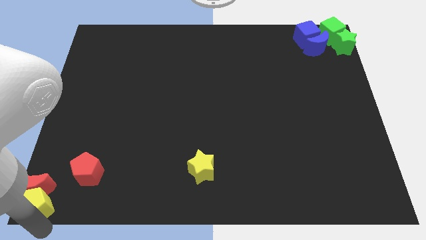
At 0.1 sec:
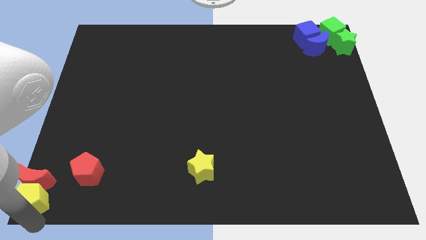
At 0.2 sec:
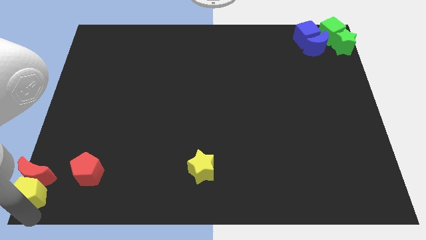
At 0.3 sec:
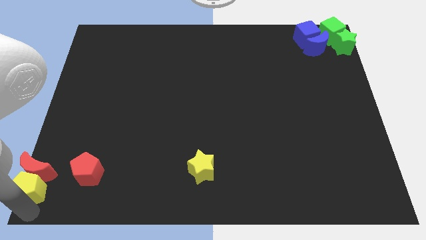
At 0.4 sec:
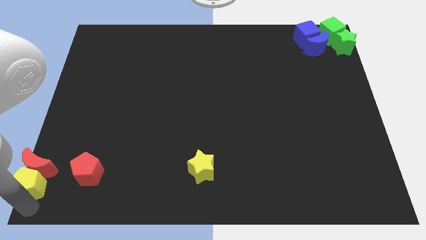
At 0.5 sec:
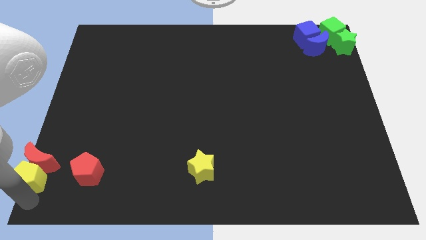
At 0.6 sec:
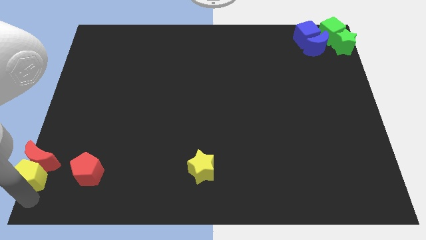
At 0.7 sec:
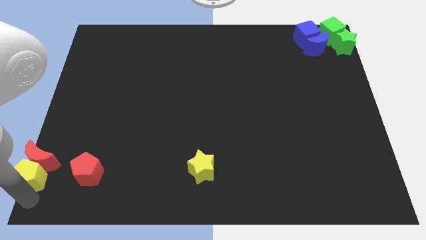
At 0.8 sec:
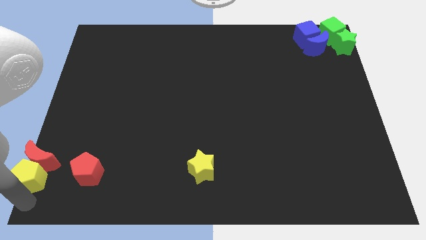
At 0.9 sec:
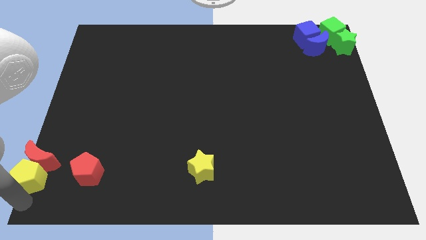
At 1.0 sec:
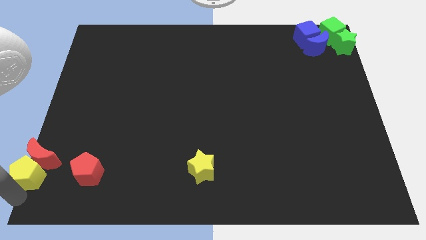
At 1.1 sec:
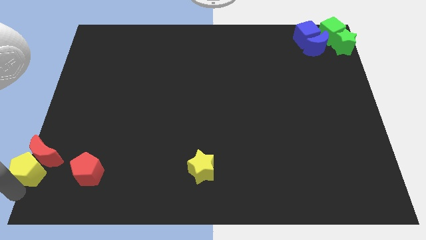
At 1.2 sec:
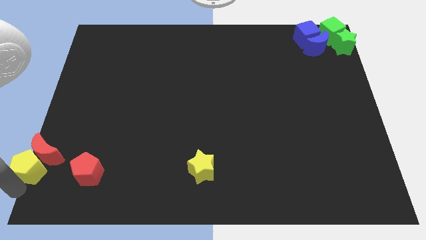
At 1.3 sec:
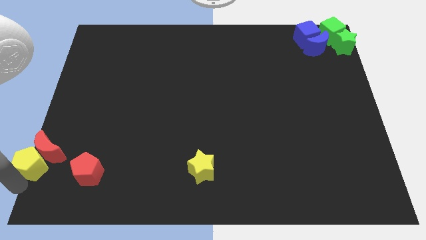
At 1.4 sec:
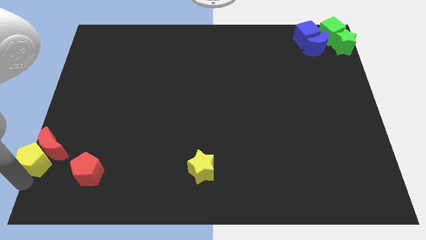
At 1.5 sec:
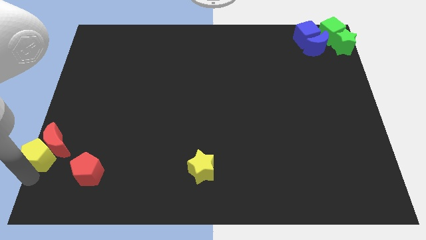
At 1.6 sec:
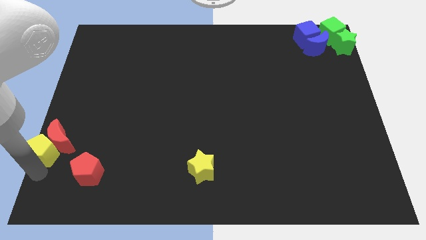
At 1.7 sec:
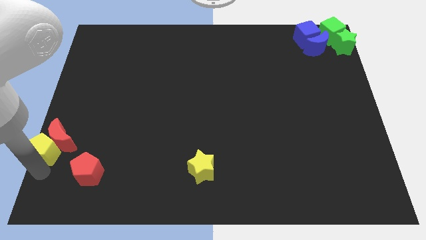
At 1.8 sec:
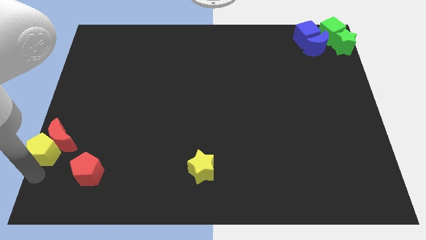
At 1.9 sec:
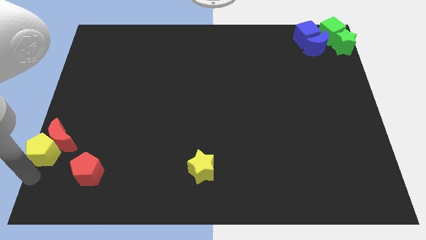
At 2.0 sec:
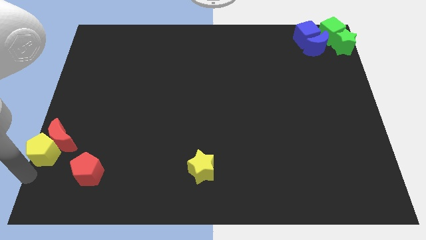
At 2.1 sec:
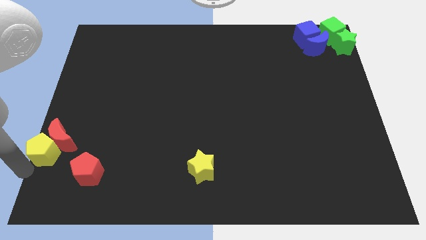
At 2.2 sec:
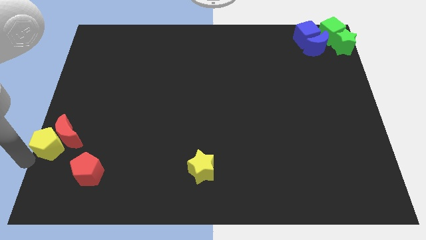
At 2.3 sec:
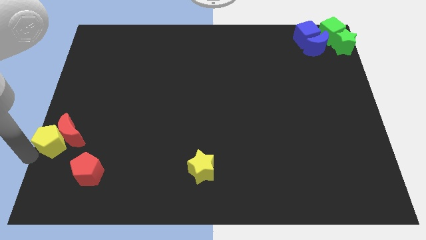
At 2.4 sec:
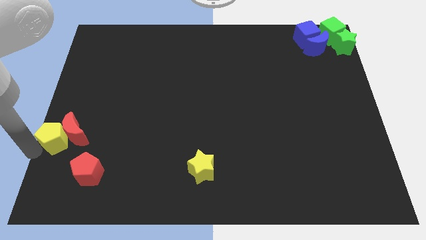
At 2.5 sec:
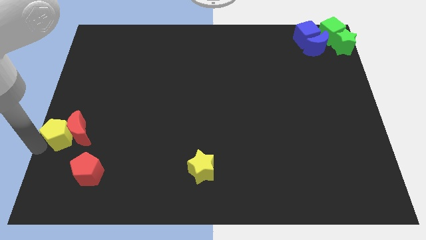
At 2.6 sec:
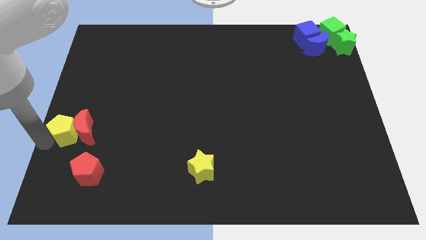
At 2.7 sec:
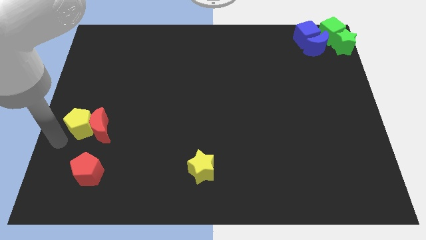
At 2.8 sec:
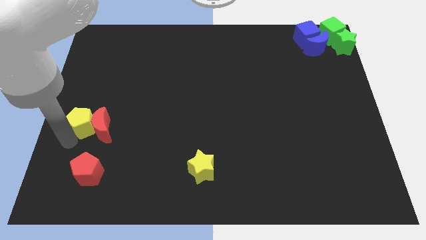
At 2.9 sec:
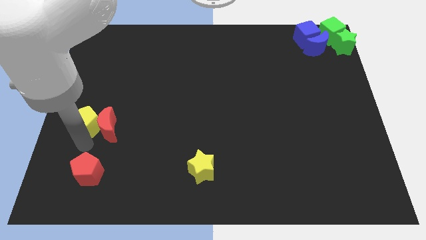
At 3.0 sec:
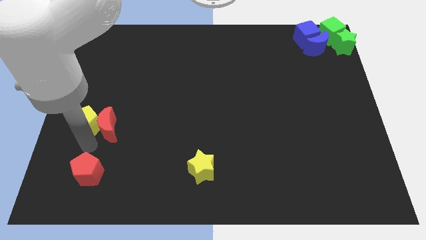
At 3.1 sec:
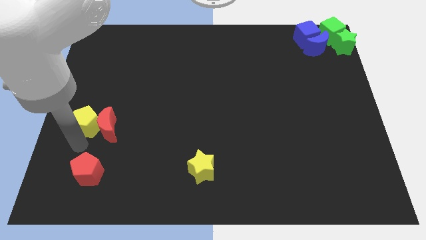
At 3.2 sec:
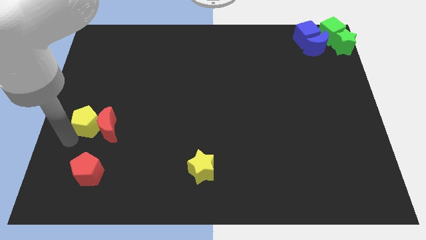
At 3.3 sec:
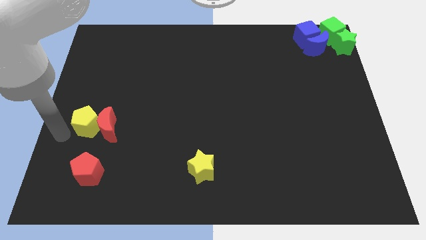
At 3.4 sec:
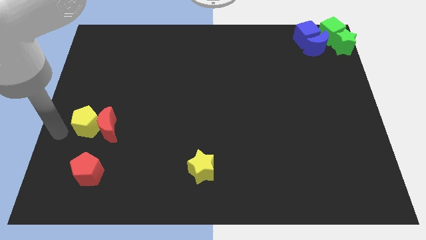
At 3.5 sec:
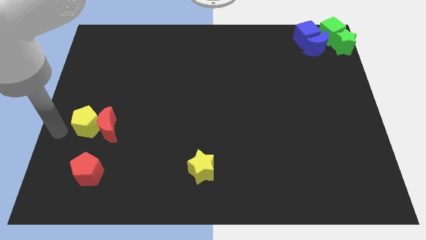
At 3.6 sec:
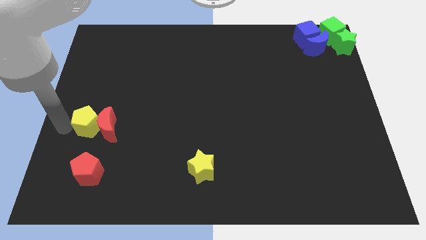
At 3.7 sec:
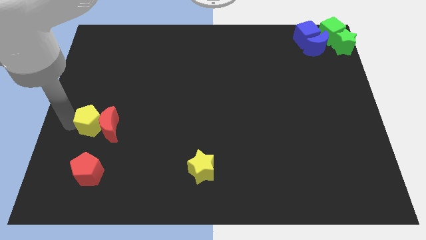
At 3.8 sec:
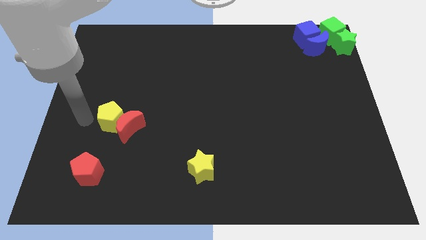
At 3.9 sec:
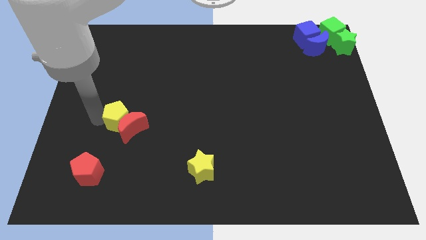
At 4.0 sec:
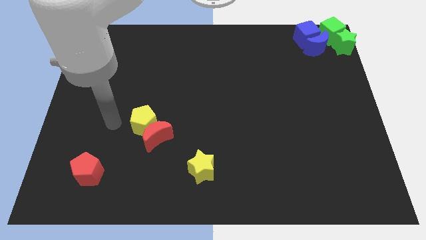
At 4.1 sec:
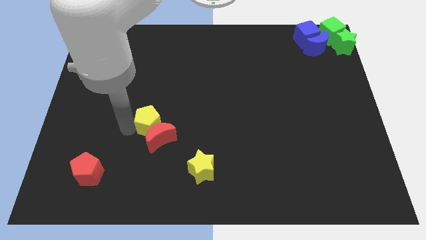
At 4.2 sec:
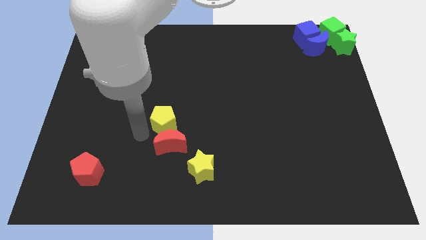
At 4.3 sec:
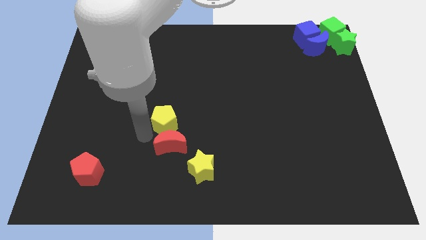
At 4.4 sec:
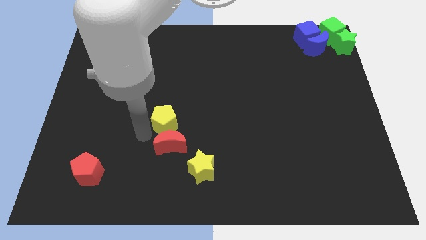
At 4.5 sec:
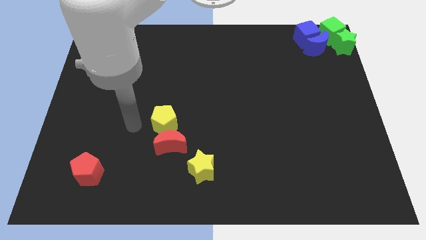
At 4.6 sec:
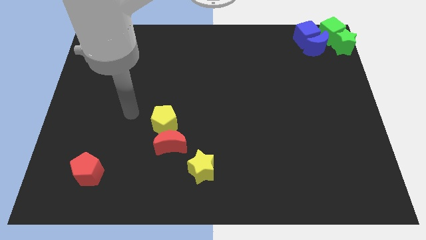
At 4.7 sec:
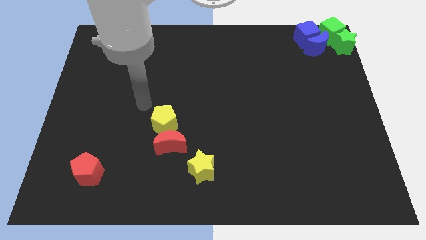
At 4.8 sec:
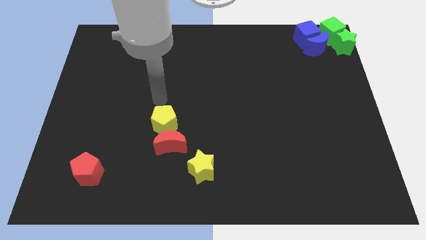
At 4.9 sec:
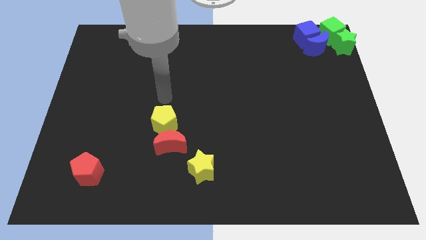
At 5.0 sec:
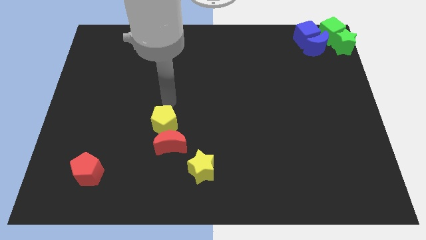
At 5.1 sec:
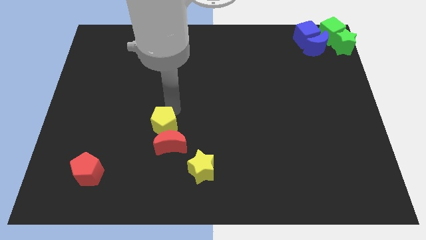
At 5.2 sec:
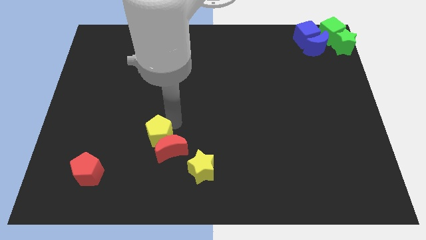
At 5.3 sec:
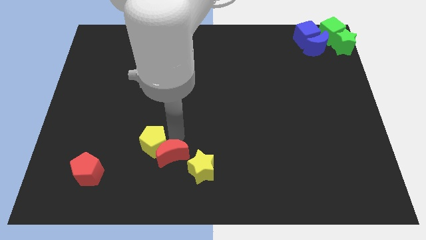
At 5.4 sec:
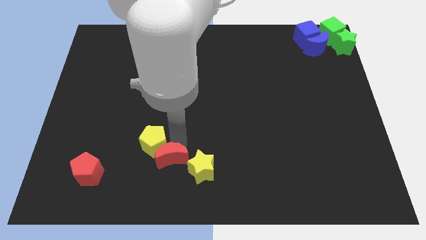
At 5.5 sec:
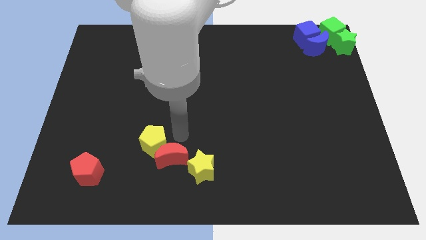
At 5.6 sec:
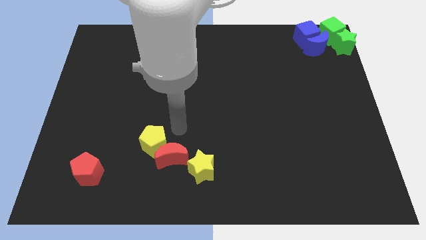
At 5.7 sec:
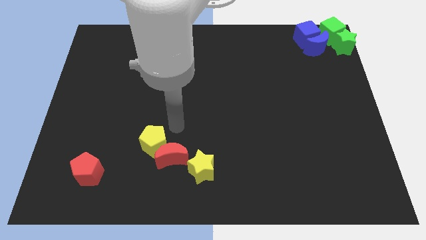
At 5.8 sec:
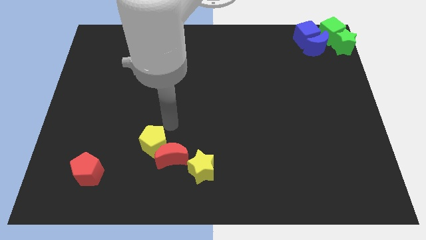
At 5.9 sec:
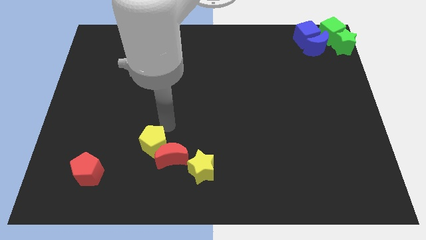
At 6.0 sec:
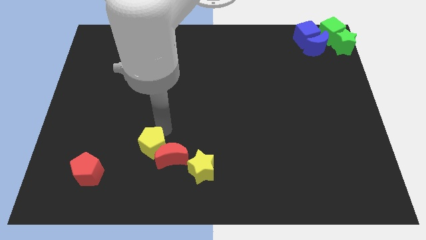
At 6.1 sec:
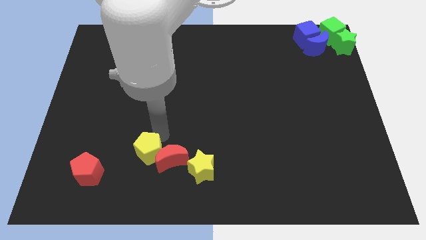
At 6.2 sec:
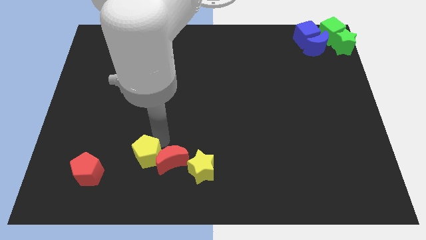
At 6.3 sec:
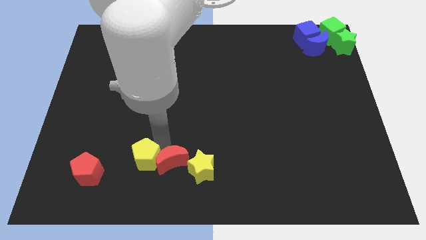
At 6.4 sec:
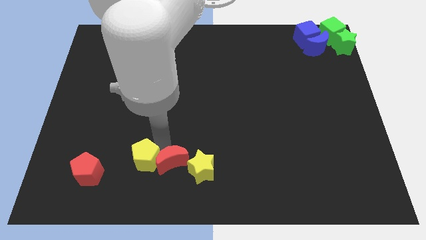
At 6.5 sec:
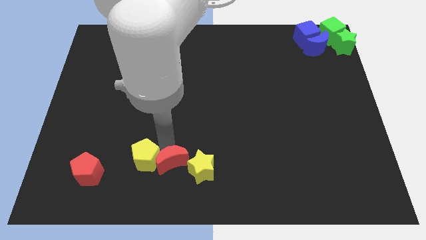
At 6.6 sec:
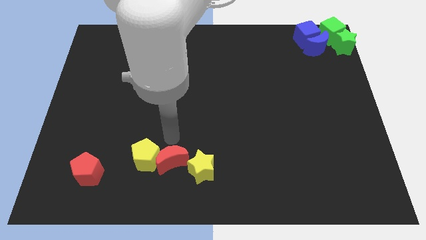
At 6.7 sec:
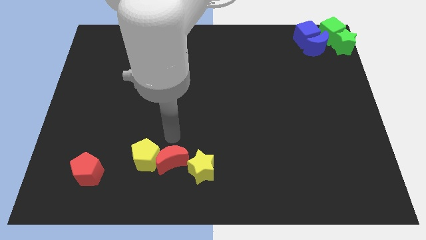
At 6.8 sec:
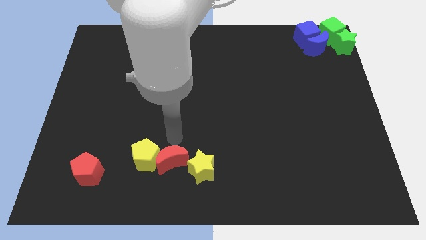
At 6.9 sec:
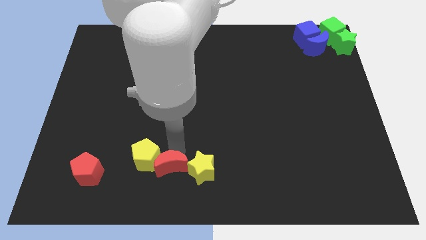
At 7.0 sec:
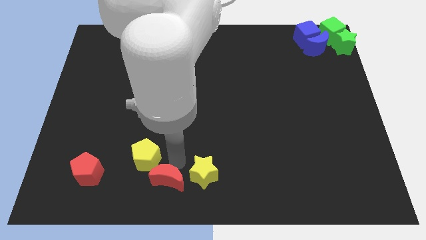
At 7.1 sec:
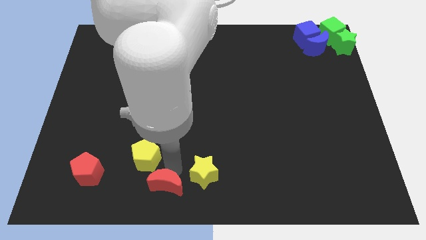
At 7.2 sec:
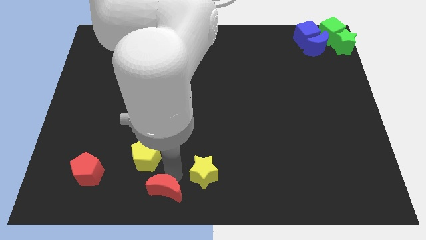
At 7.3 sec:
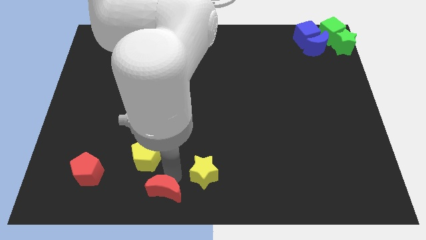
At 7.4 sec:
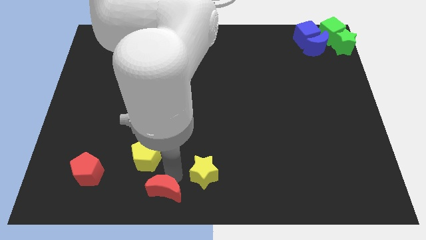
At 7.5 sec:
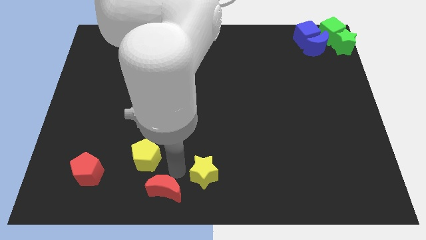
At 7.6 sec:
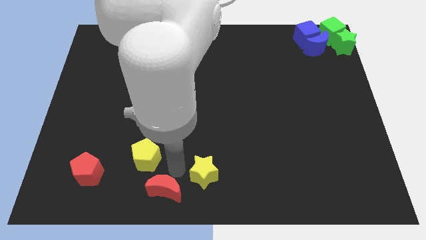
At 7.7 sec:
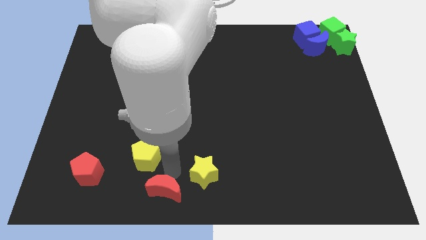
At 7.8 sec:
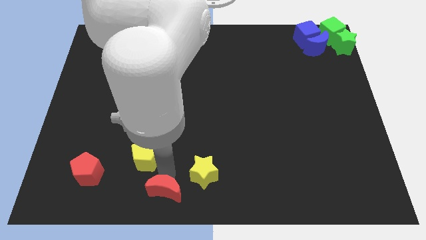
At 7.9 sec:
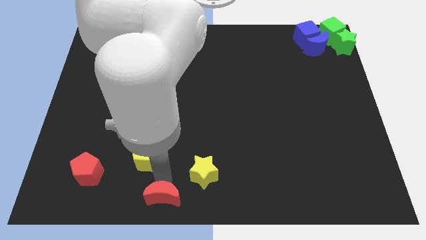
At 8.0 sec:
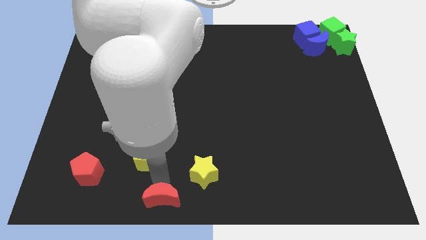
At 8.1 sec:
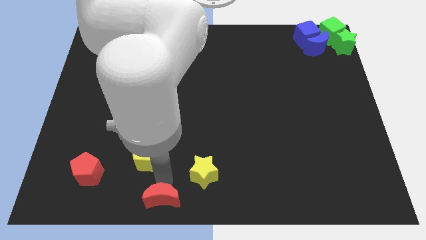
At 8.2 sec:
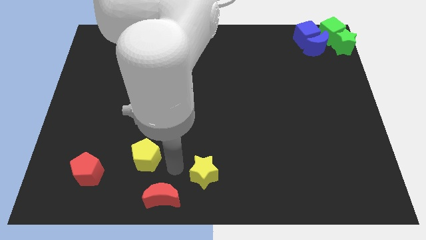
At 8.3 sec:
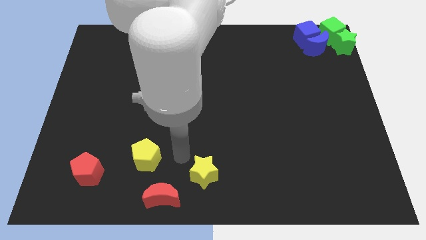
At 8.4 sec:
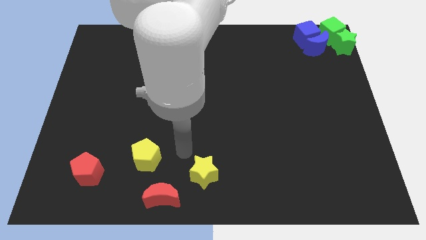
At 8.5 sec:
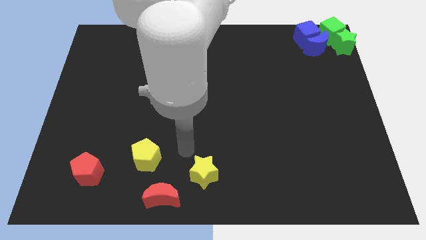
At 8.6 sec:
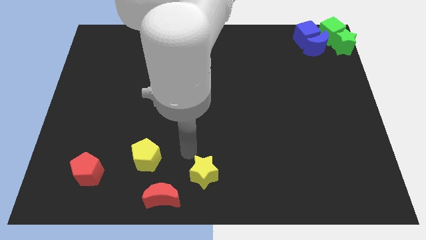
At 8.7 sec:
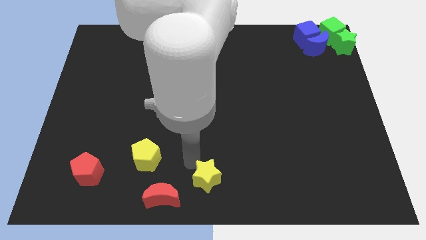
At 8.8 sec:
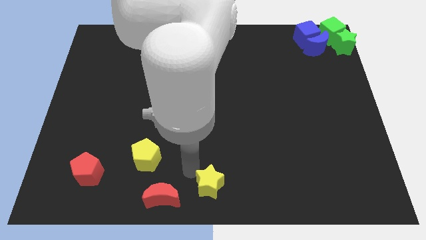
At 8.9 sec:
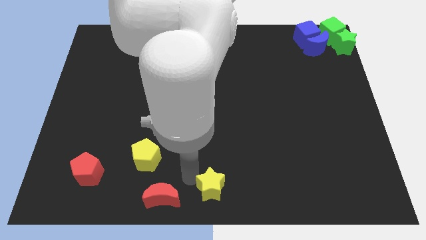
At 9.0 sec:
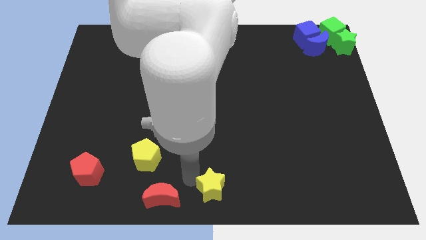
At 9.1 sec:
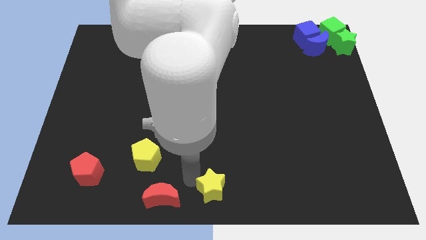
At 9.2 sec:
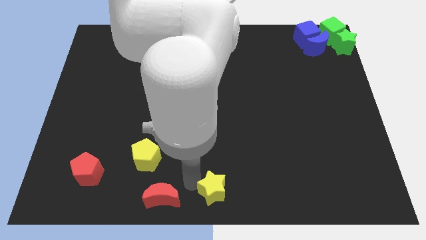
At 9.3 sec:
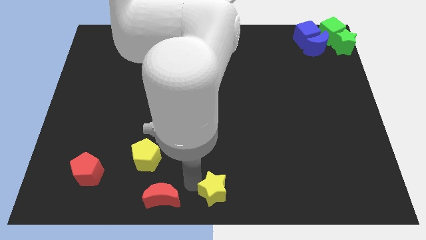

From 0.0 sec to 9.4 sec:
push the yellow pentagon with the red crescent to the bottom center
